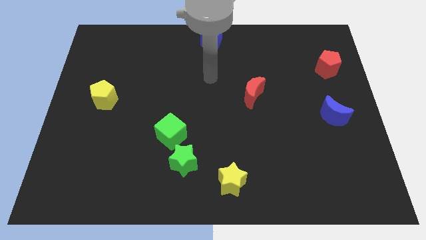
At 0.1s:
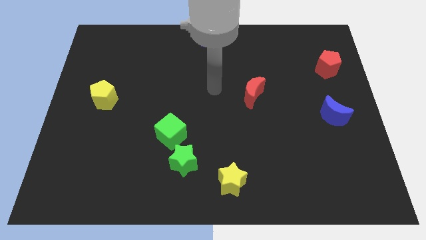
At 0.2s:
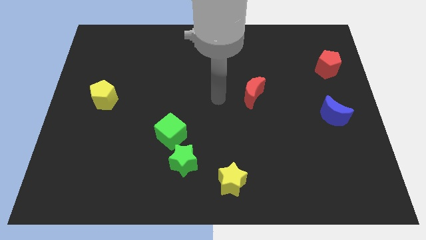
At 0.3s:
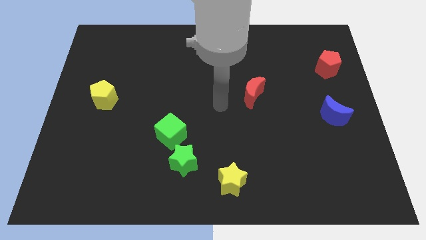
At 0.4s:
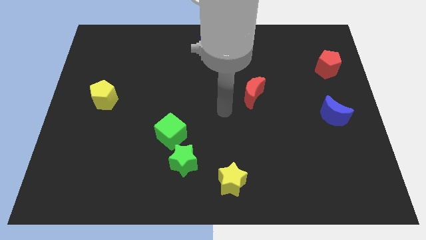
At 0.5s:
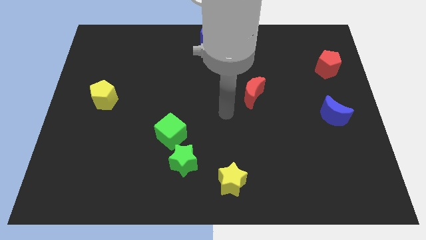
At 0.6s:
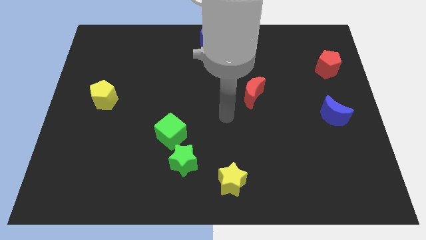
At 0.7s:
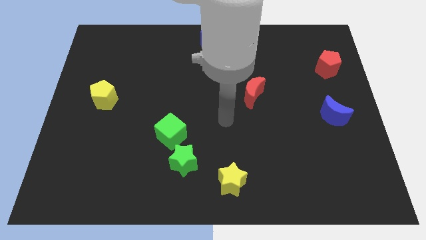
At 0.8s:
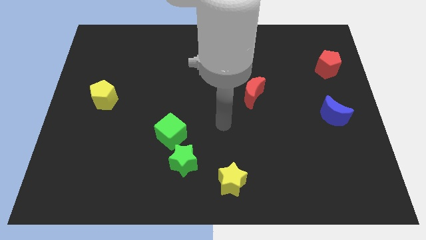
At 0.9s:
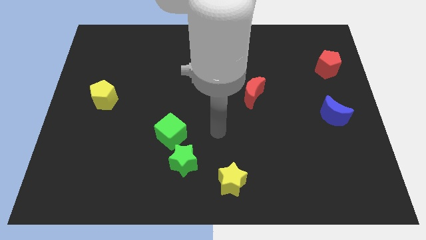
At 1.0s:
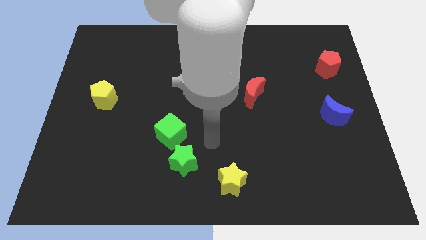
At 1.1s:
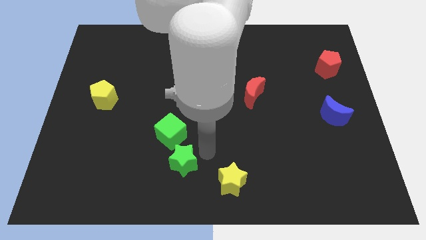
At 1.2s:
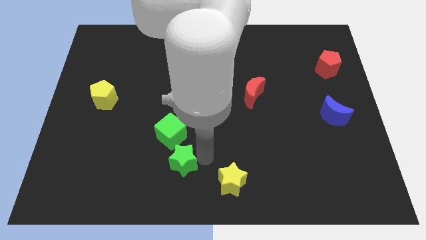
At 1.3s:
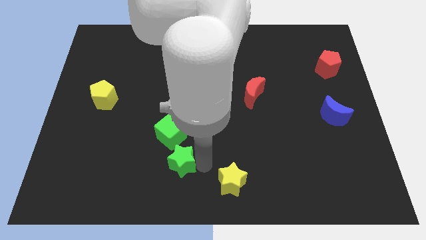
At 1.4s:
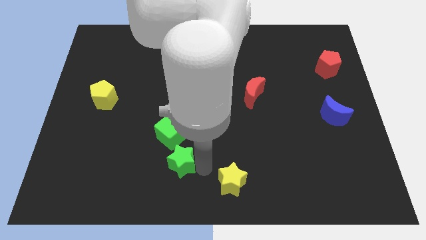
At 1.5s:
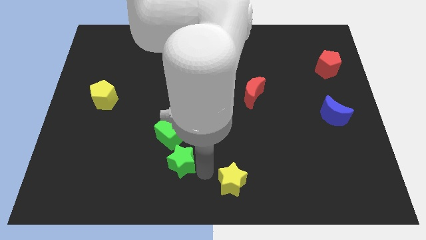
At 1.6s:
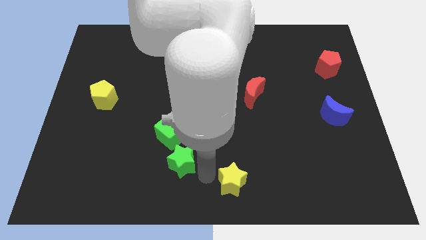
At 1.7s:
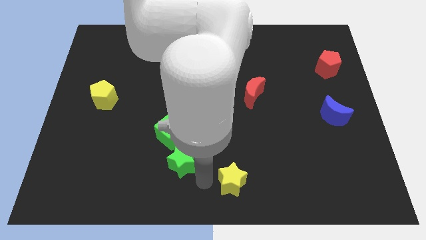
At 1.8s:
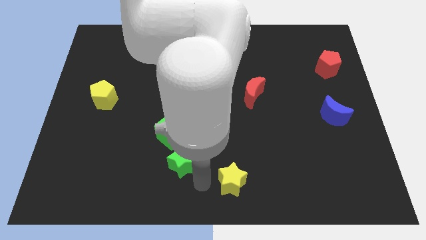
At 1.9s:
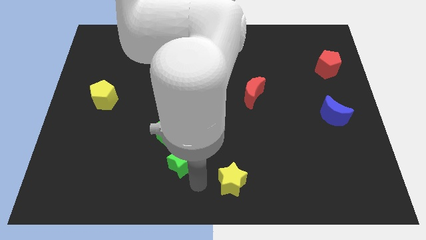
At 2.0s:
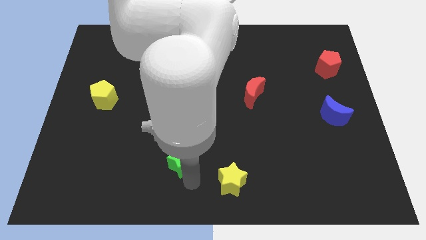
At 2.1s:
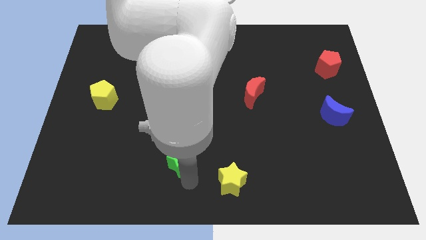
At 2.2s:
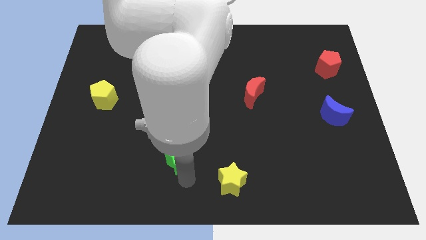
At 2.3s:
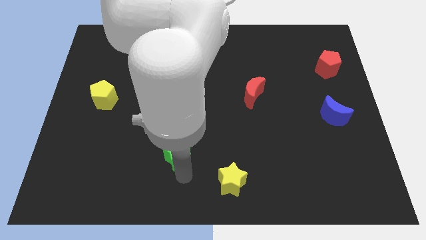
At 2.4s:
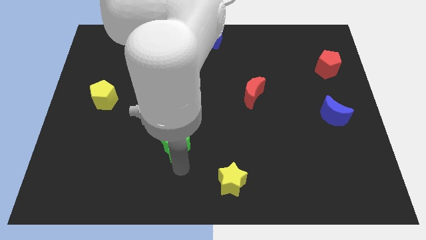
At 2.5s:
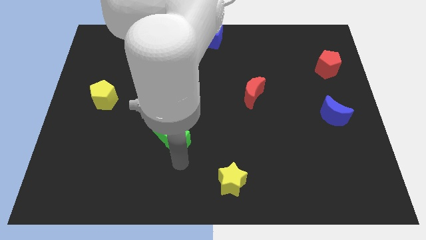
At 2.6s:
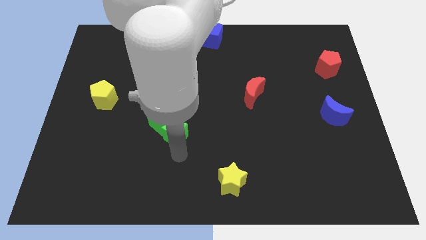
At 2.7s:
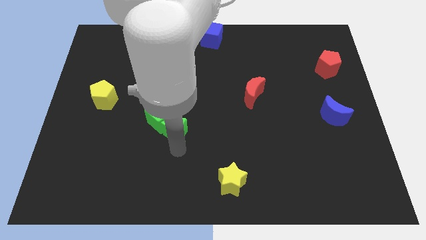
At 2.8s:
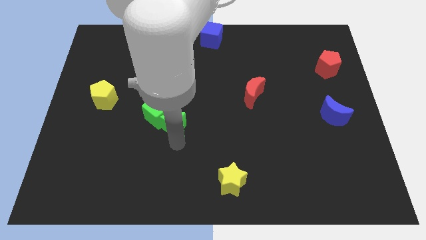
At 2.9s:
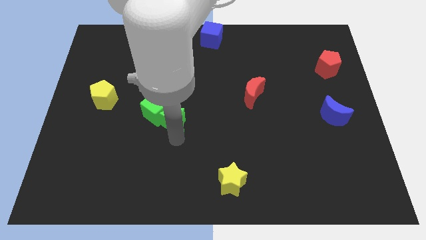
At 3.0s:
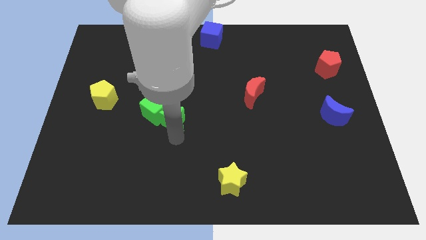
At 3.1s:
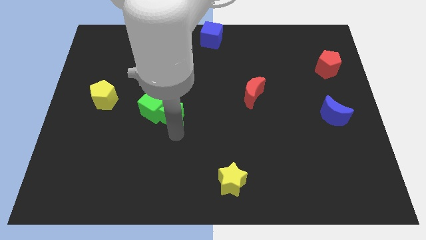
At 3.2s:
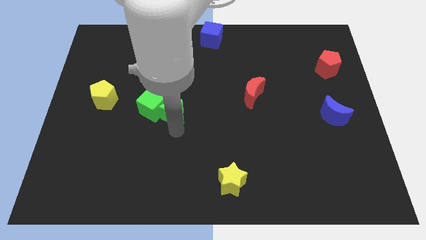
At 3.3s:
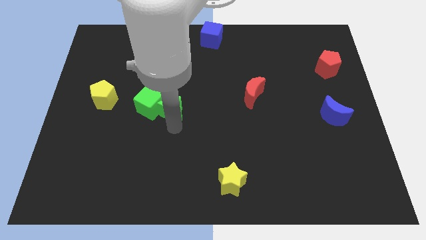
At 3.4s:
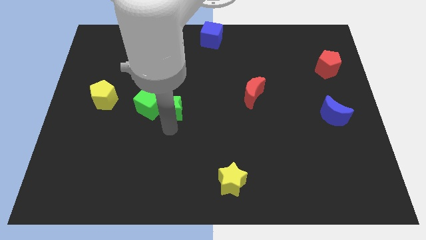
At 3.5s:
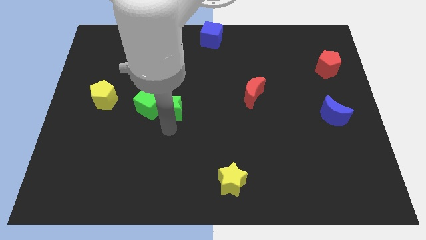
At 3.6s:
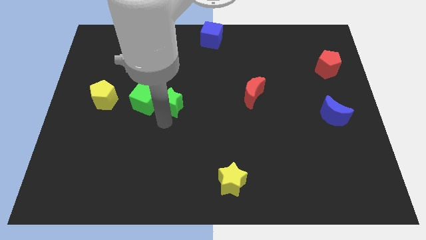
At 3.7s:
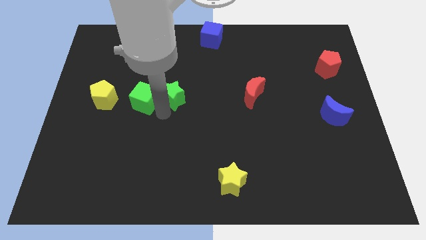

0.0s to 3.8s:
push both the green blocks to the right side of the yellow pentagon

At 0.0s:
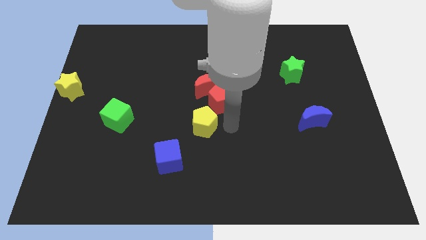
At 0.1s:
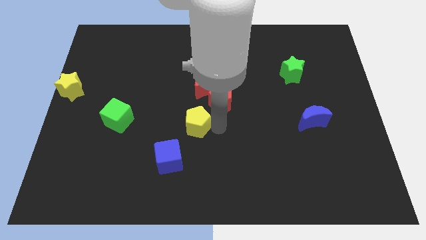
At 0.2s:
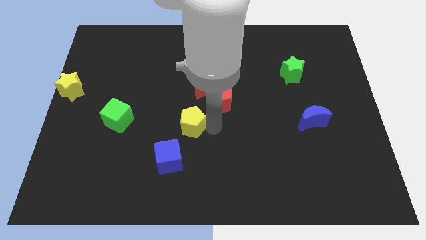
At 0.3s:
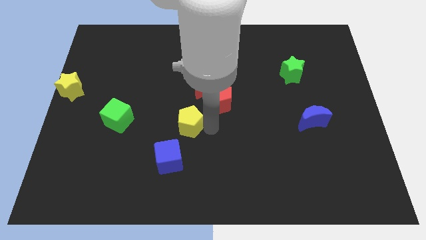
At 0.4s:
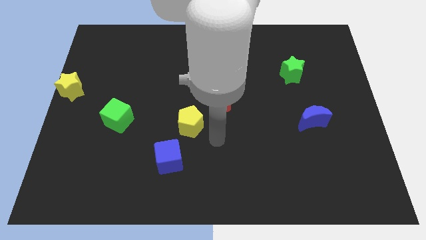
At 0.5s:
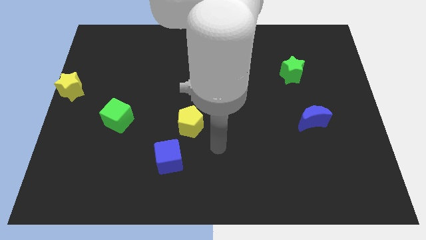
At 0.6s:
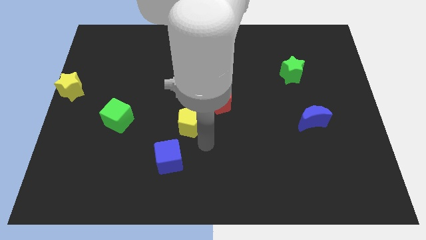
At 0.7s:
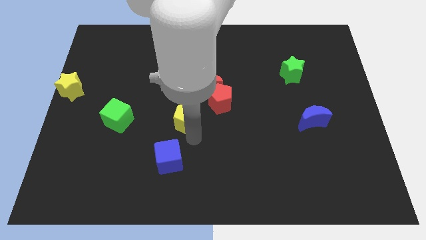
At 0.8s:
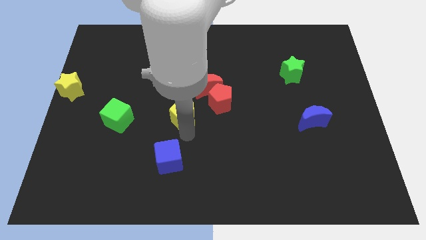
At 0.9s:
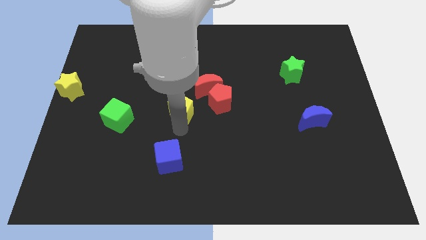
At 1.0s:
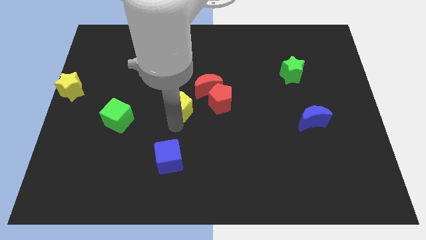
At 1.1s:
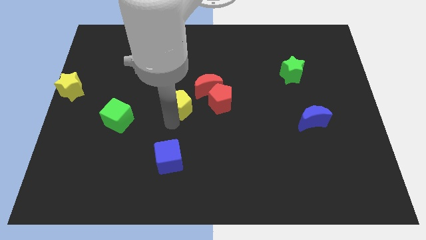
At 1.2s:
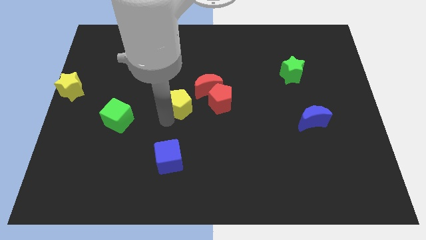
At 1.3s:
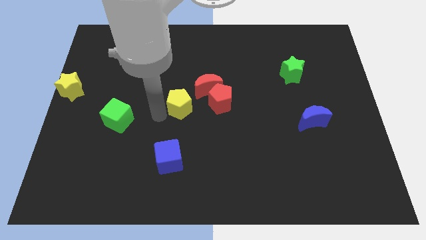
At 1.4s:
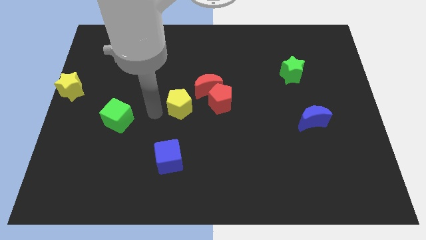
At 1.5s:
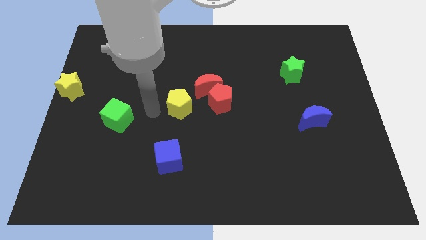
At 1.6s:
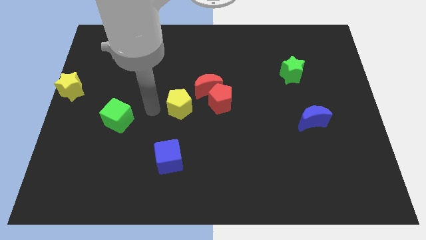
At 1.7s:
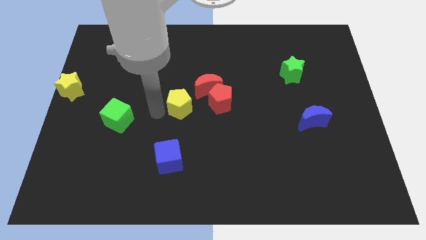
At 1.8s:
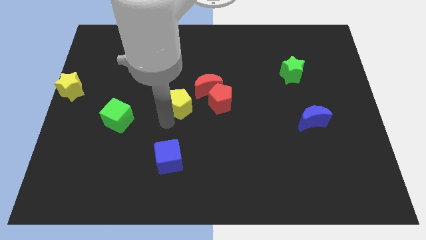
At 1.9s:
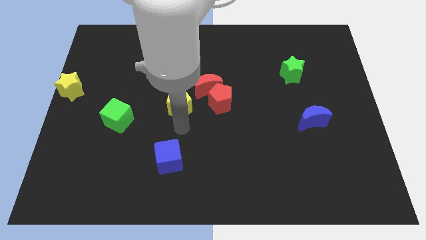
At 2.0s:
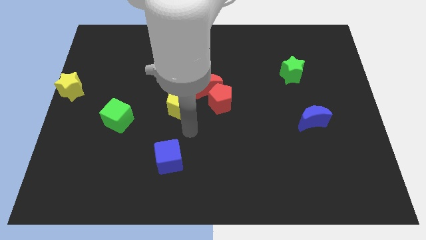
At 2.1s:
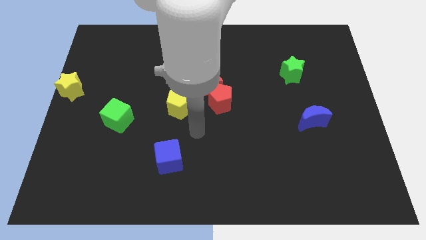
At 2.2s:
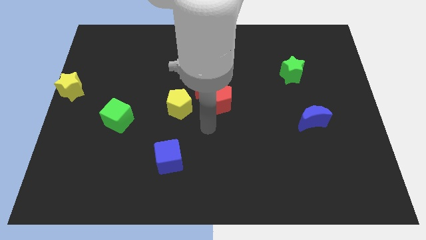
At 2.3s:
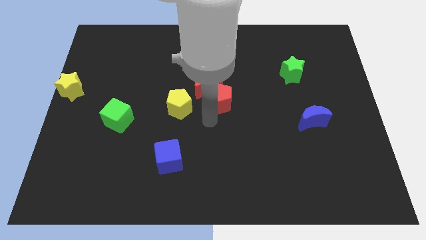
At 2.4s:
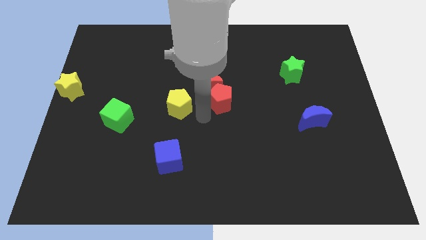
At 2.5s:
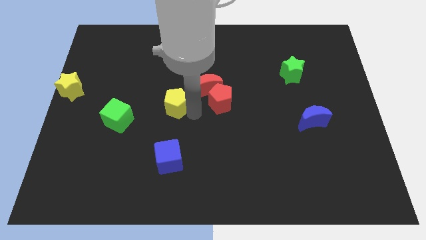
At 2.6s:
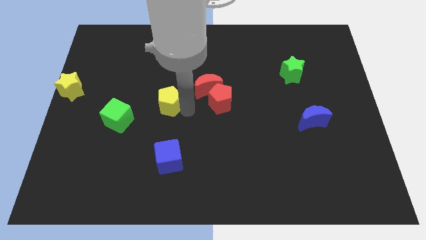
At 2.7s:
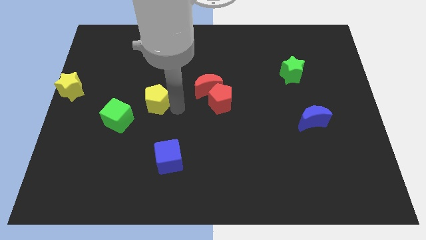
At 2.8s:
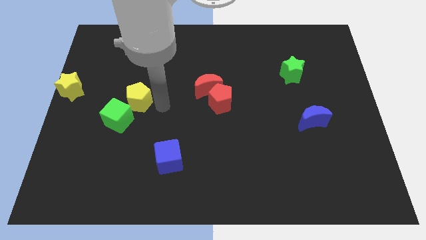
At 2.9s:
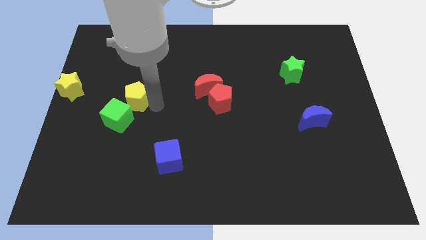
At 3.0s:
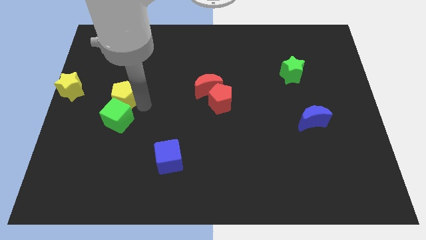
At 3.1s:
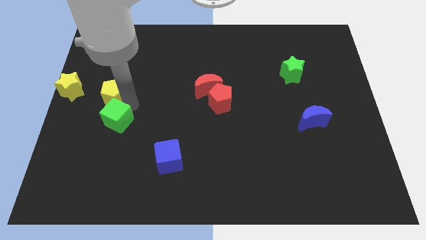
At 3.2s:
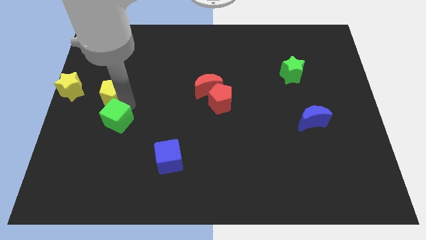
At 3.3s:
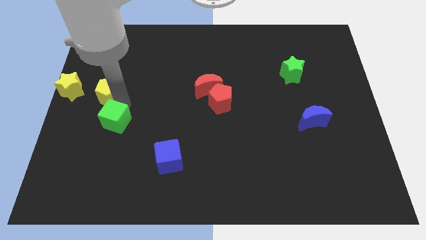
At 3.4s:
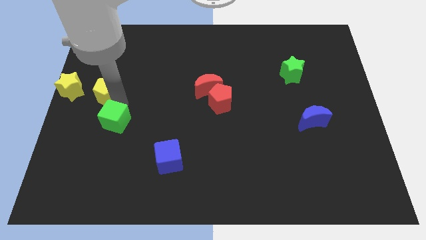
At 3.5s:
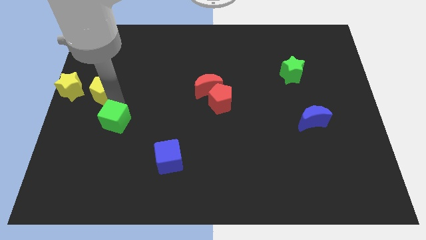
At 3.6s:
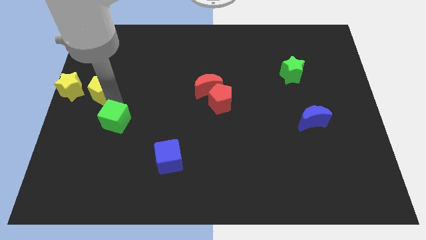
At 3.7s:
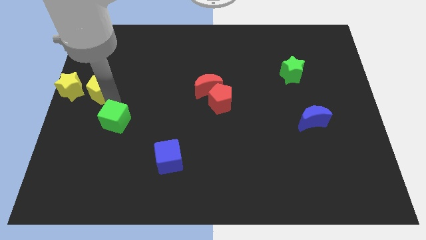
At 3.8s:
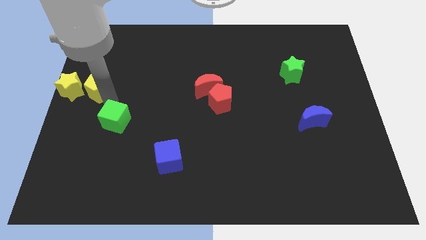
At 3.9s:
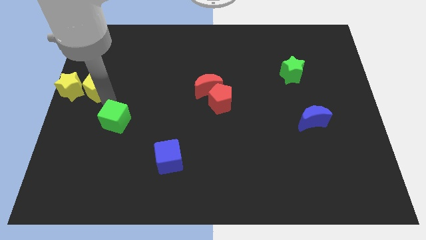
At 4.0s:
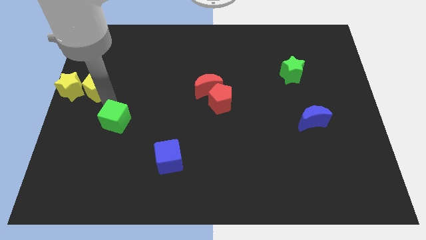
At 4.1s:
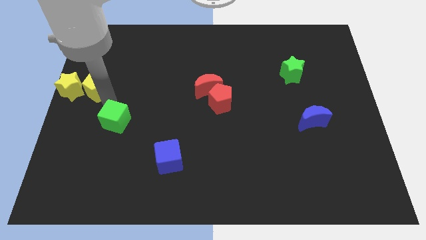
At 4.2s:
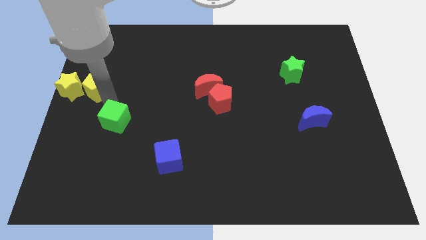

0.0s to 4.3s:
move yellow pentagon into yellow star

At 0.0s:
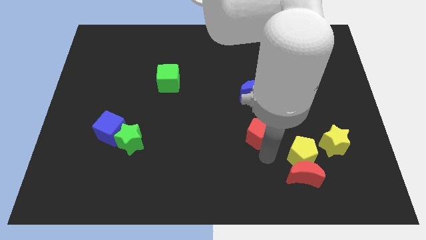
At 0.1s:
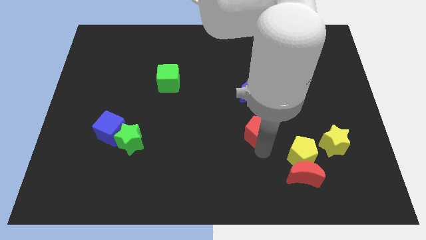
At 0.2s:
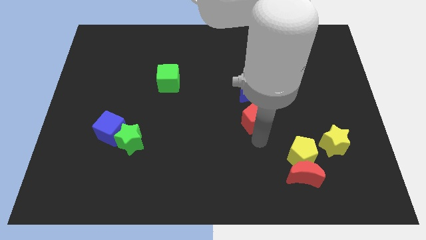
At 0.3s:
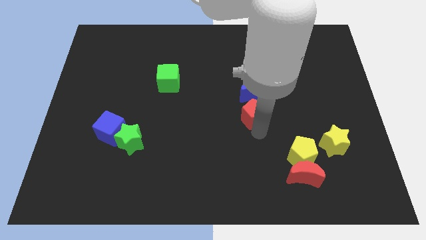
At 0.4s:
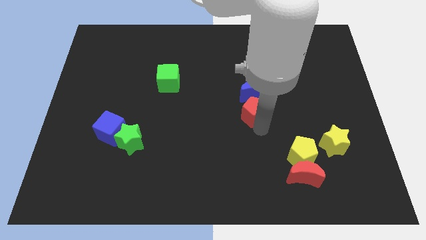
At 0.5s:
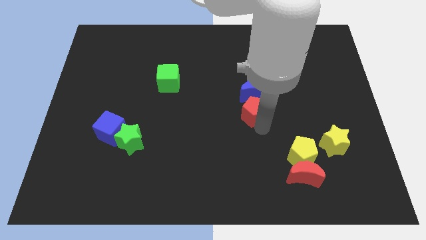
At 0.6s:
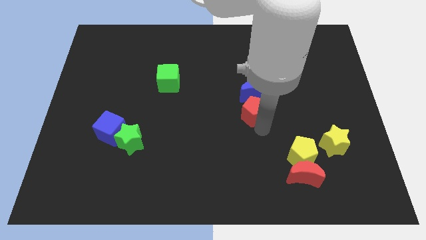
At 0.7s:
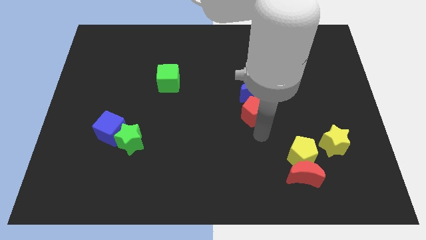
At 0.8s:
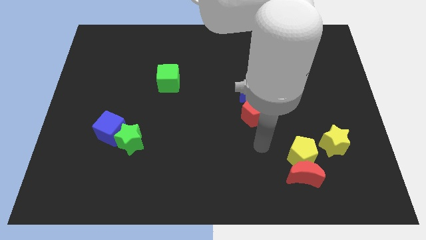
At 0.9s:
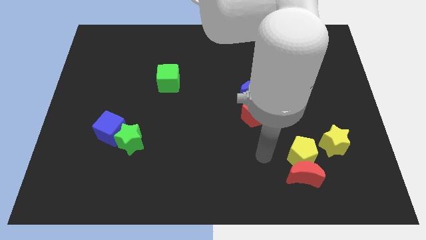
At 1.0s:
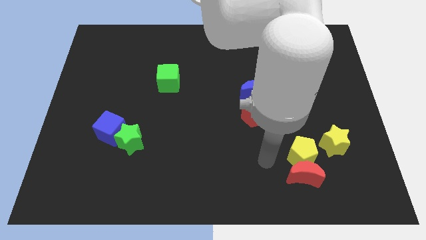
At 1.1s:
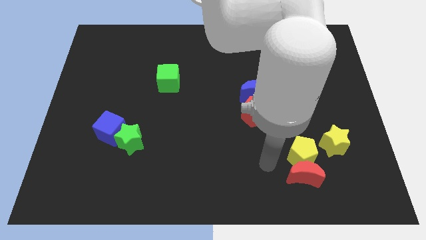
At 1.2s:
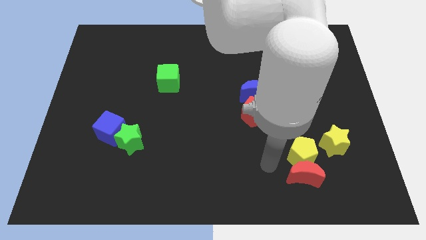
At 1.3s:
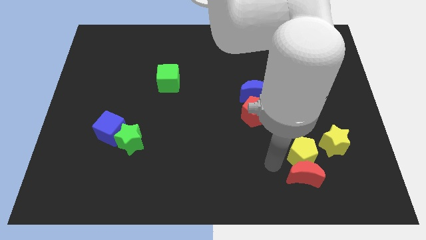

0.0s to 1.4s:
push red pentagon into blue moon
